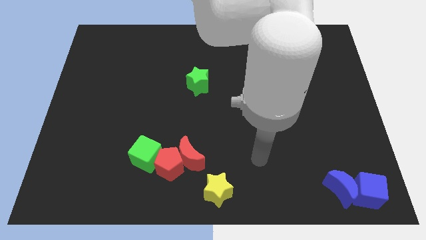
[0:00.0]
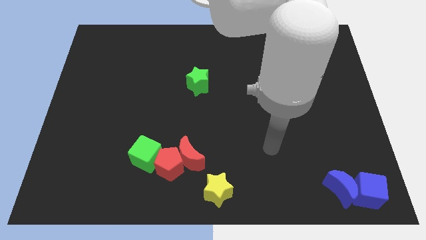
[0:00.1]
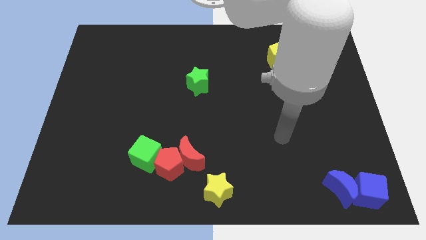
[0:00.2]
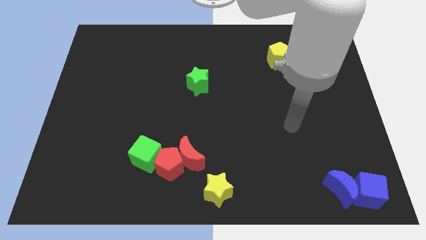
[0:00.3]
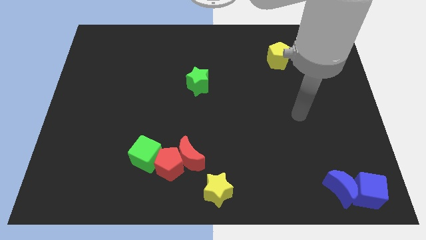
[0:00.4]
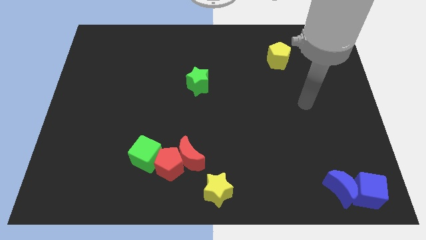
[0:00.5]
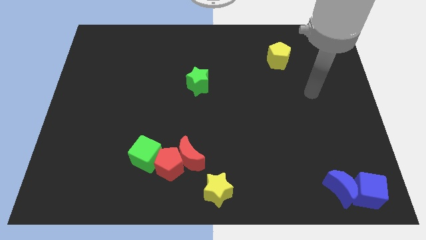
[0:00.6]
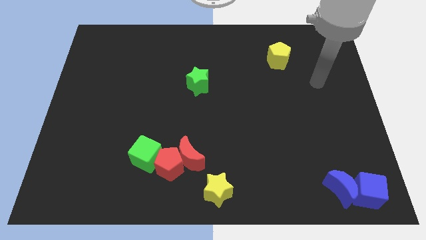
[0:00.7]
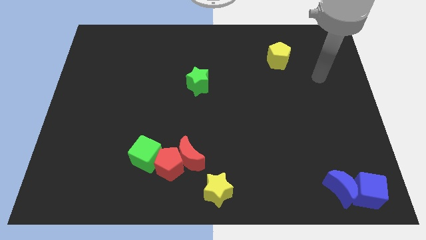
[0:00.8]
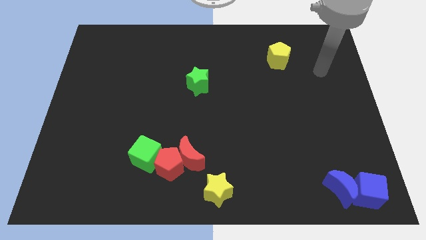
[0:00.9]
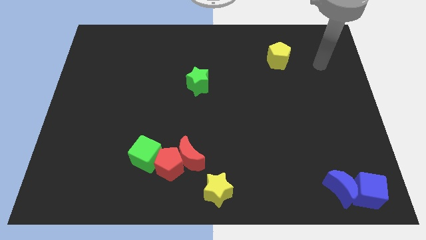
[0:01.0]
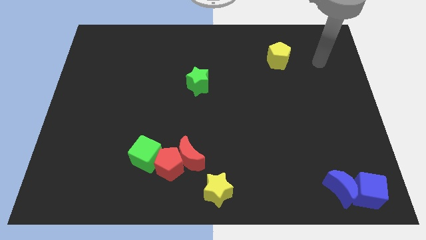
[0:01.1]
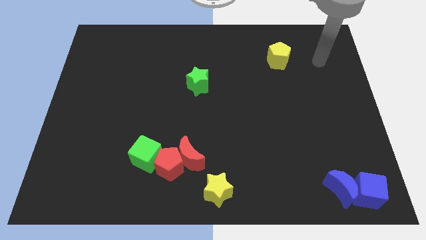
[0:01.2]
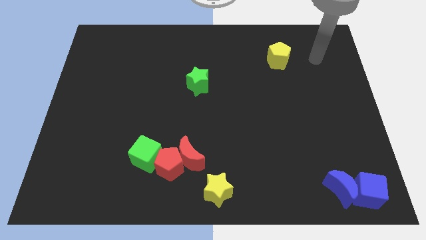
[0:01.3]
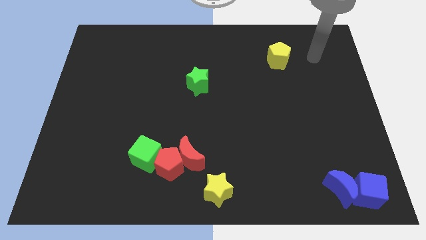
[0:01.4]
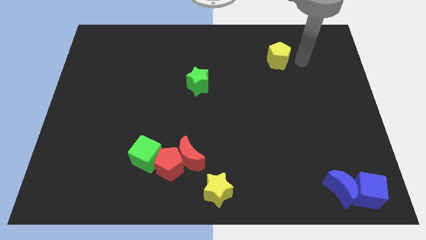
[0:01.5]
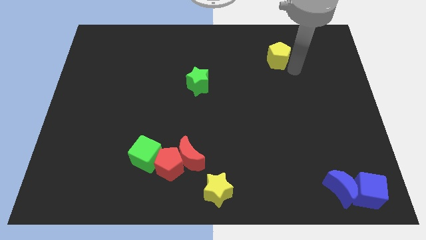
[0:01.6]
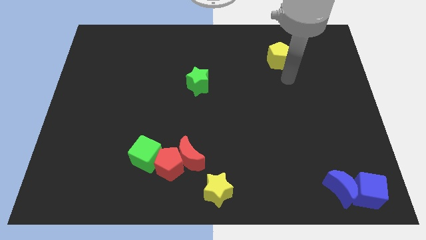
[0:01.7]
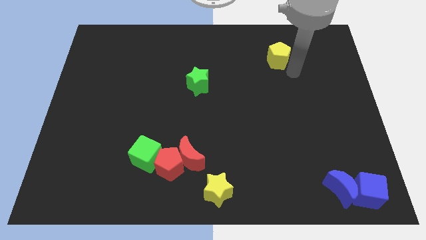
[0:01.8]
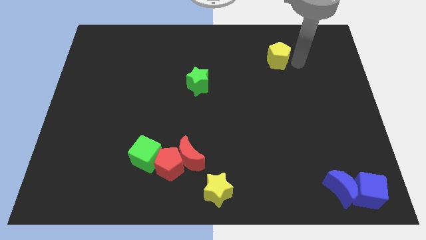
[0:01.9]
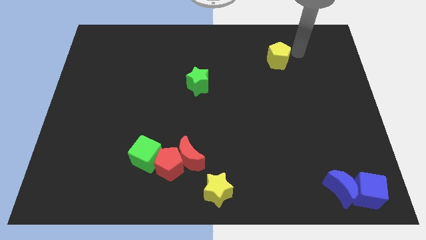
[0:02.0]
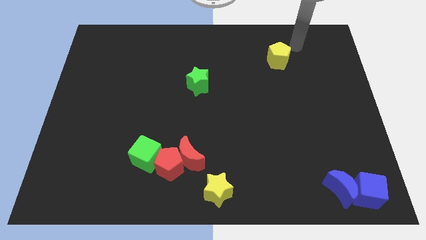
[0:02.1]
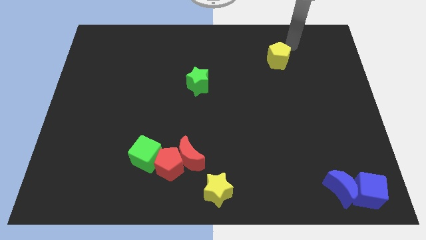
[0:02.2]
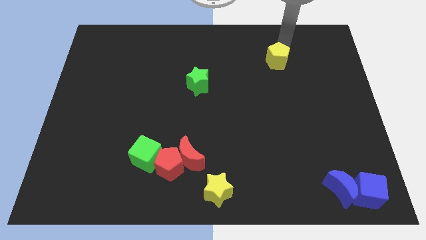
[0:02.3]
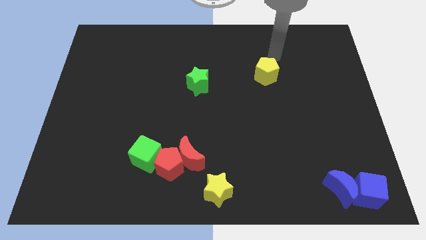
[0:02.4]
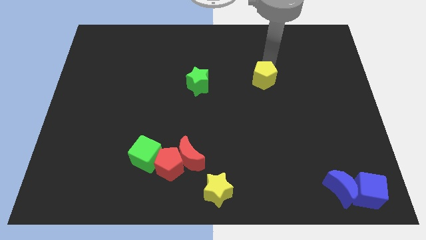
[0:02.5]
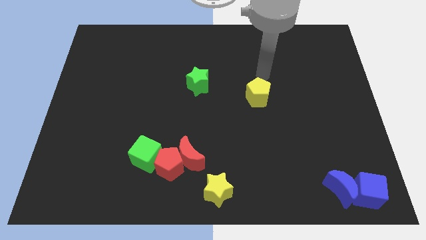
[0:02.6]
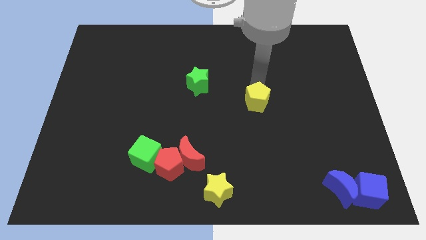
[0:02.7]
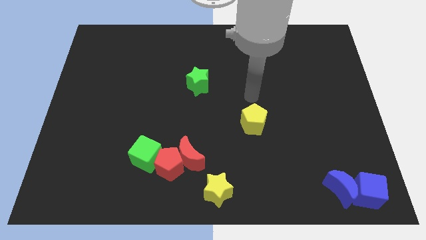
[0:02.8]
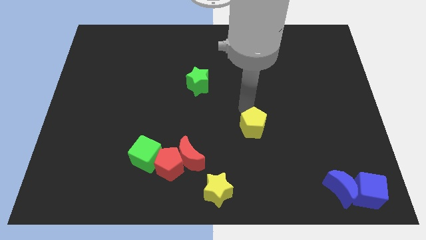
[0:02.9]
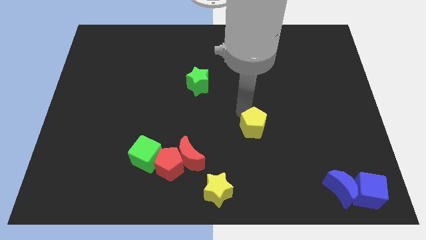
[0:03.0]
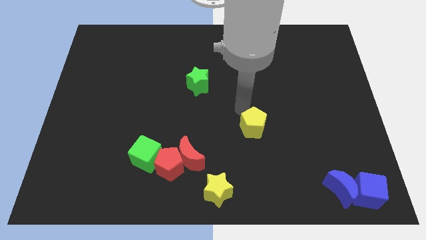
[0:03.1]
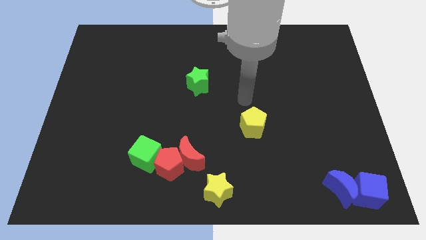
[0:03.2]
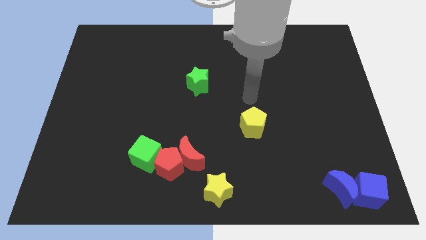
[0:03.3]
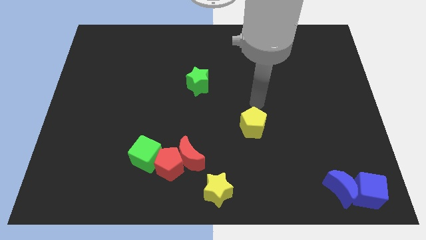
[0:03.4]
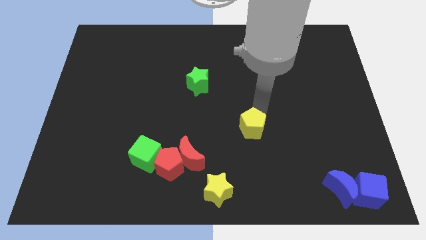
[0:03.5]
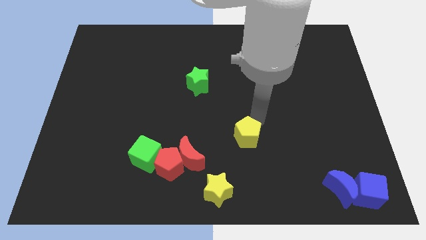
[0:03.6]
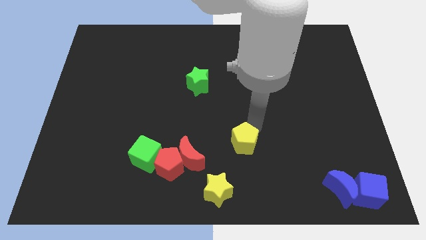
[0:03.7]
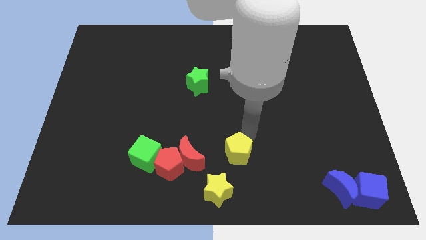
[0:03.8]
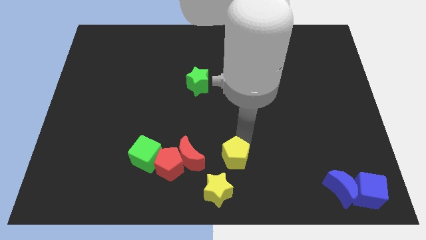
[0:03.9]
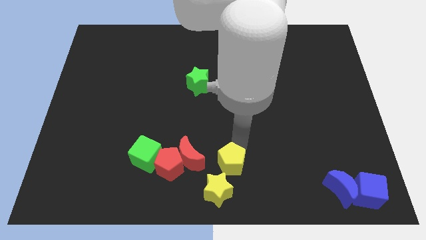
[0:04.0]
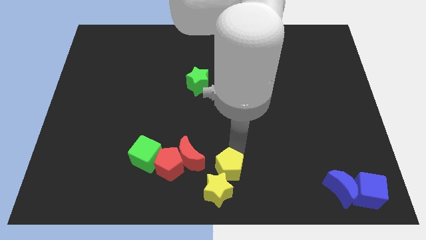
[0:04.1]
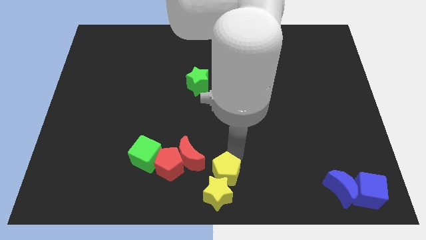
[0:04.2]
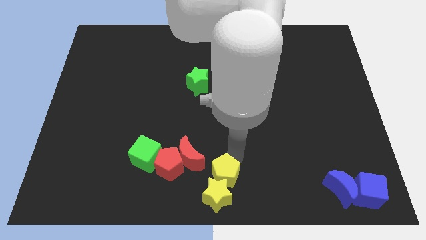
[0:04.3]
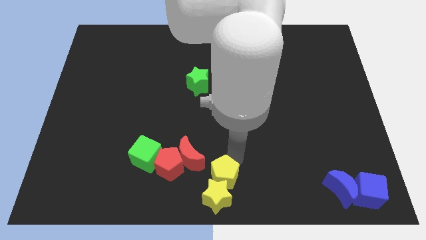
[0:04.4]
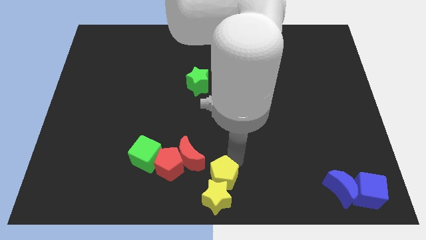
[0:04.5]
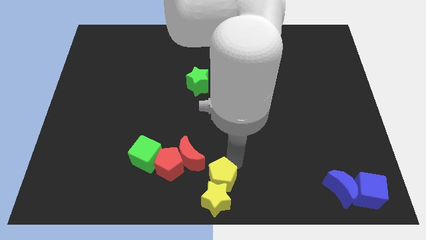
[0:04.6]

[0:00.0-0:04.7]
push the yellow pentagon into the yellow star

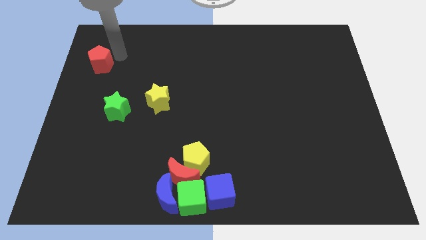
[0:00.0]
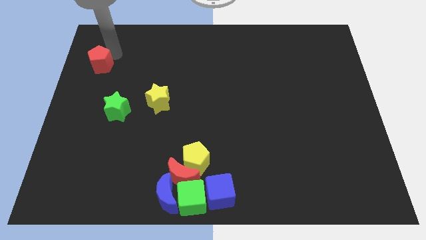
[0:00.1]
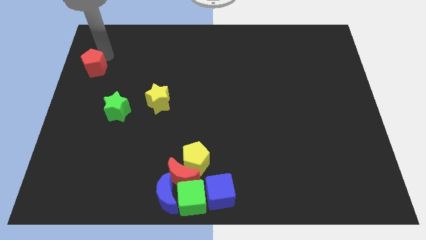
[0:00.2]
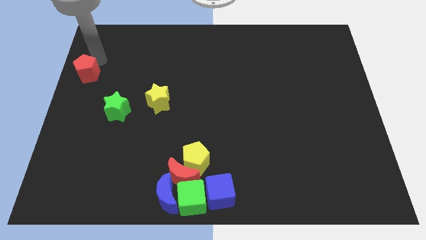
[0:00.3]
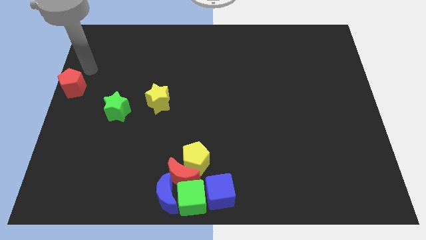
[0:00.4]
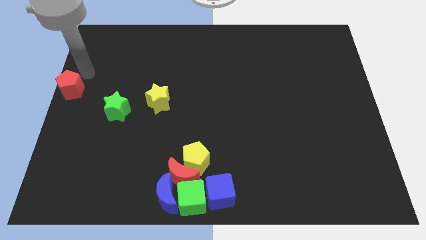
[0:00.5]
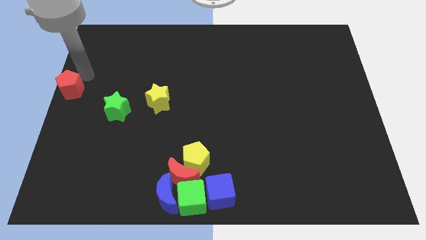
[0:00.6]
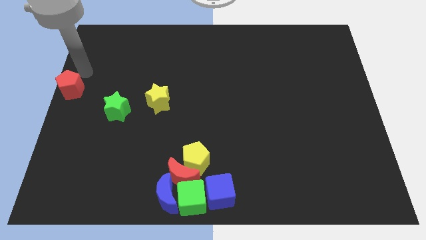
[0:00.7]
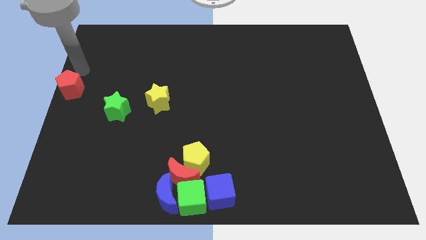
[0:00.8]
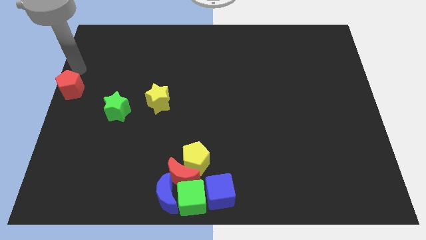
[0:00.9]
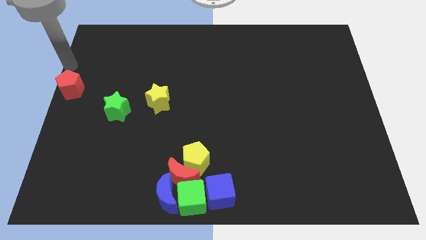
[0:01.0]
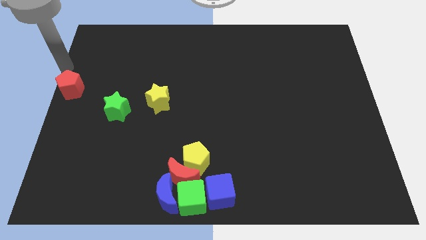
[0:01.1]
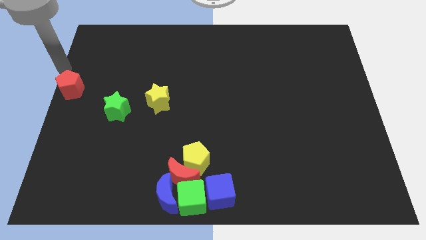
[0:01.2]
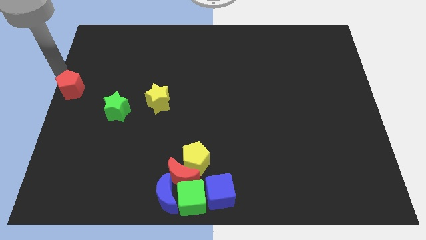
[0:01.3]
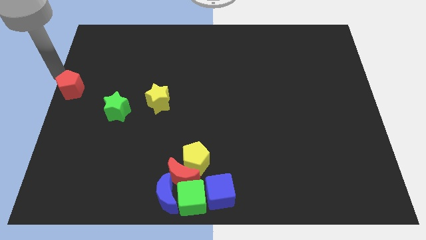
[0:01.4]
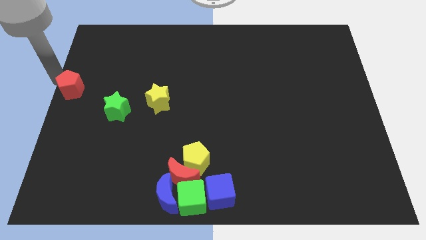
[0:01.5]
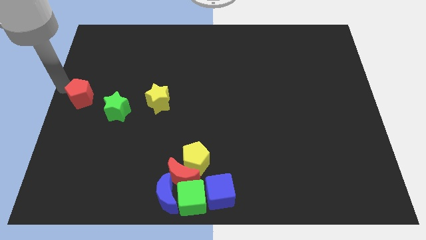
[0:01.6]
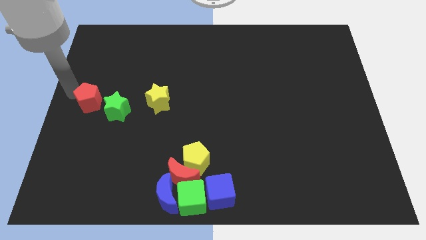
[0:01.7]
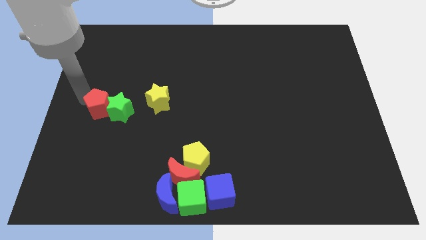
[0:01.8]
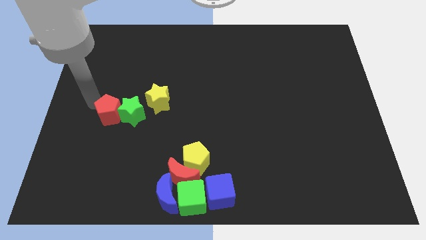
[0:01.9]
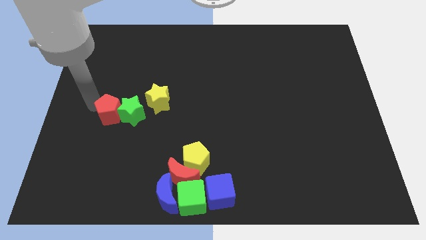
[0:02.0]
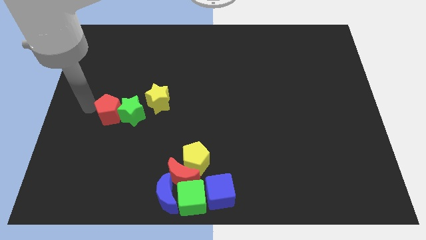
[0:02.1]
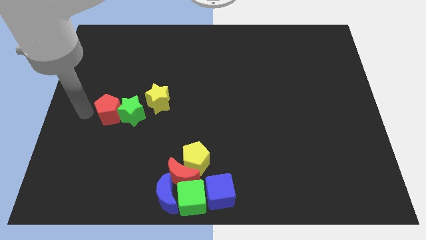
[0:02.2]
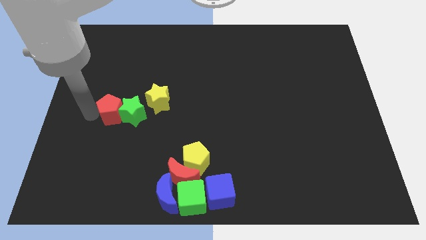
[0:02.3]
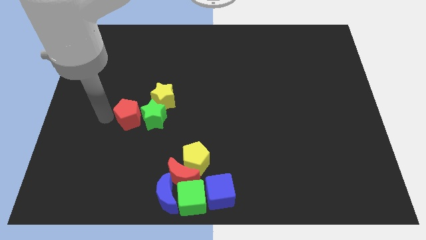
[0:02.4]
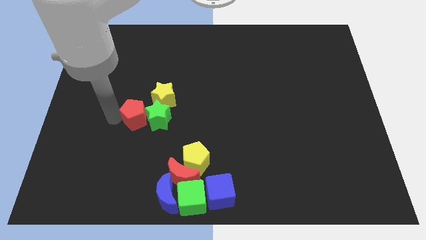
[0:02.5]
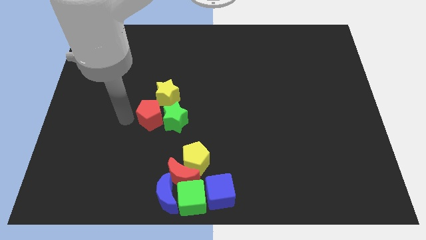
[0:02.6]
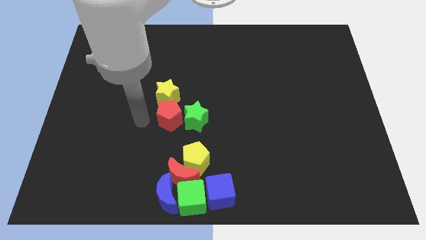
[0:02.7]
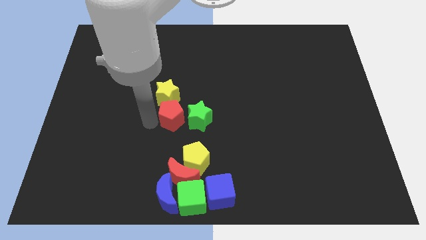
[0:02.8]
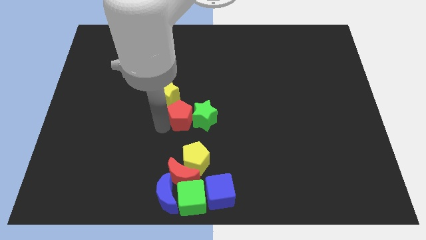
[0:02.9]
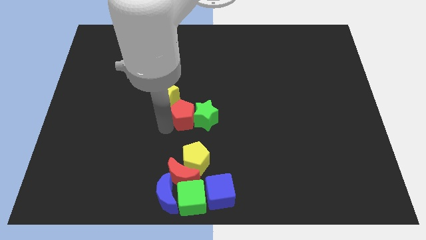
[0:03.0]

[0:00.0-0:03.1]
push the red pentagon and green star towards the center

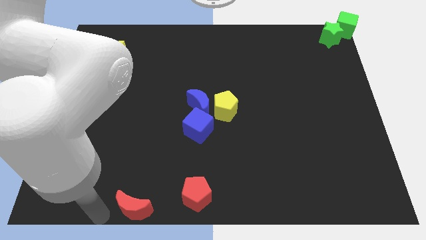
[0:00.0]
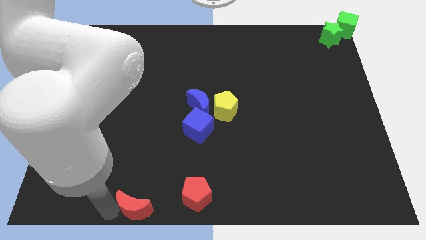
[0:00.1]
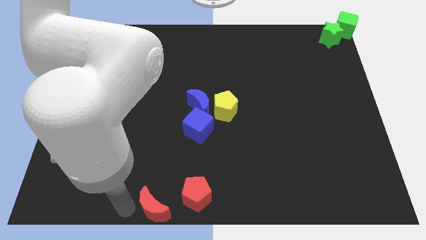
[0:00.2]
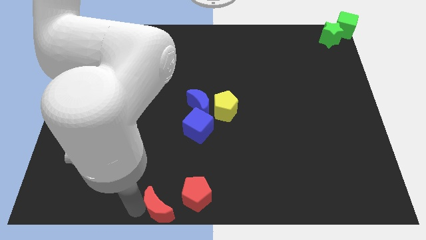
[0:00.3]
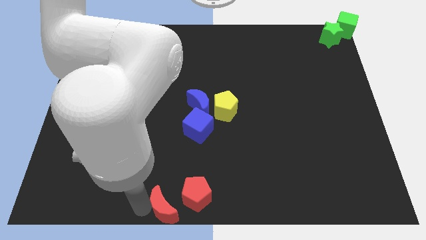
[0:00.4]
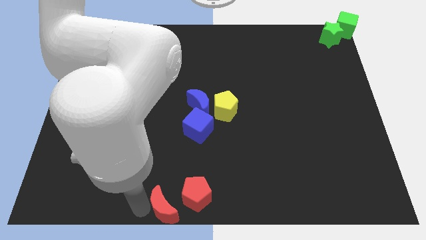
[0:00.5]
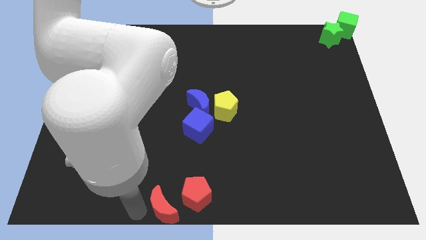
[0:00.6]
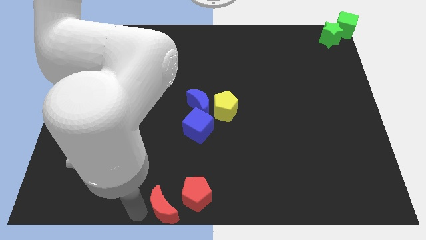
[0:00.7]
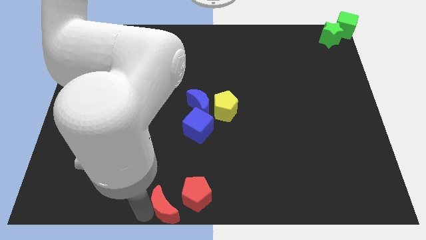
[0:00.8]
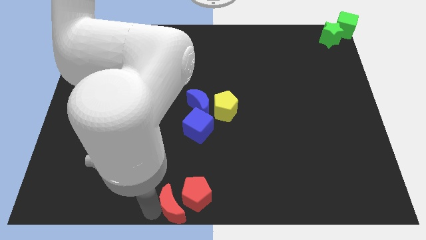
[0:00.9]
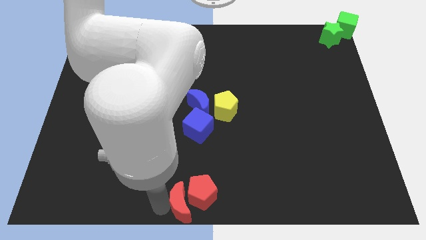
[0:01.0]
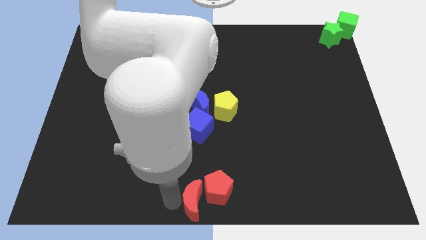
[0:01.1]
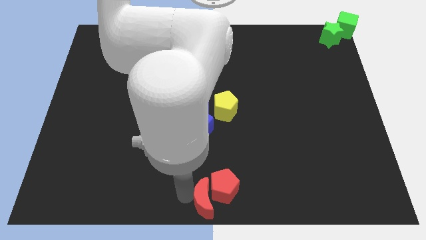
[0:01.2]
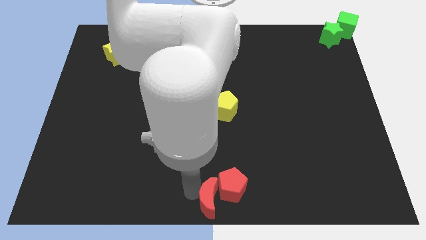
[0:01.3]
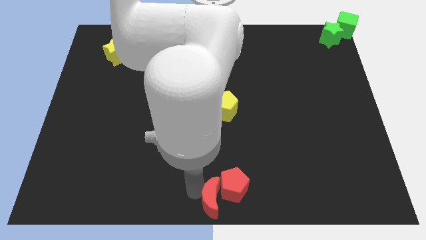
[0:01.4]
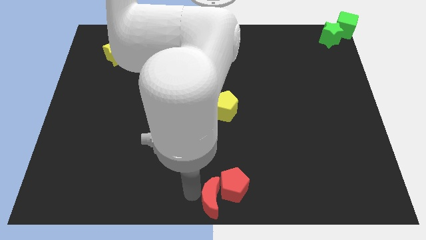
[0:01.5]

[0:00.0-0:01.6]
place the red blocks at the bottom center of the board
